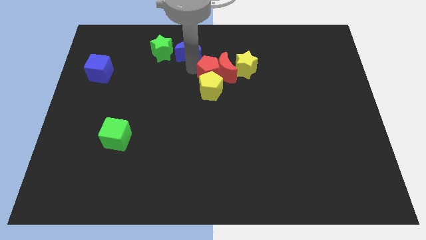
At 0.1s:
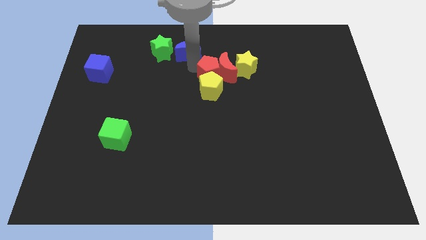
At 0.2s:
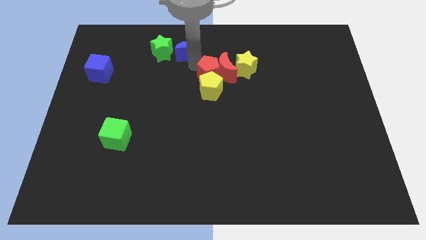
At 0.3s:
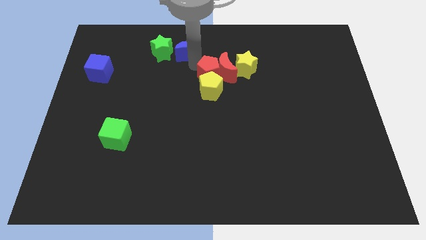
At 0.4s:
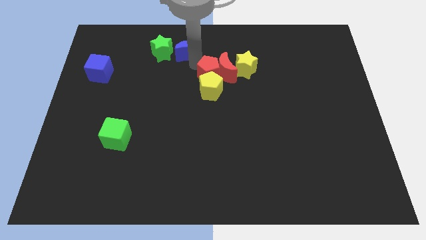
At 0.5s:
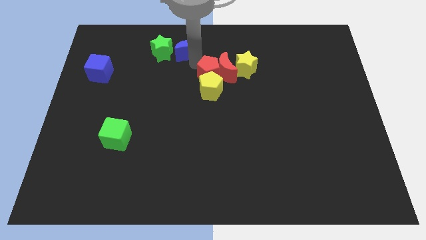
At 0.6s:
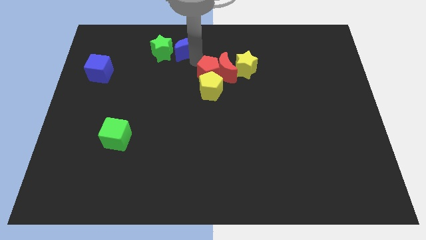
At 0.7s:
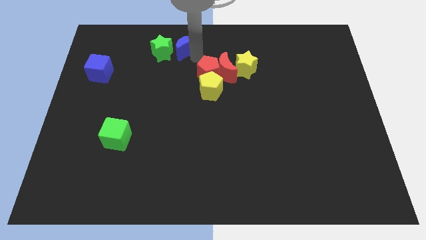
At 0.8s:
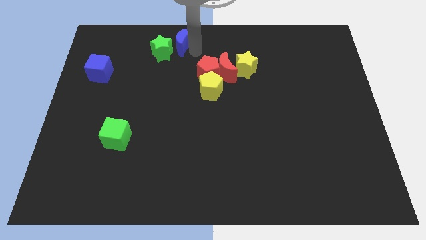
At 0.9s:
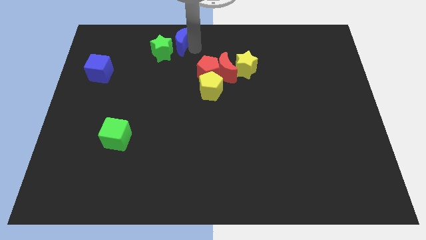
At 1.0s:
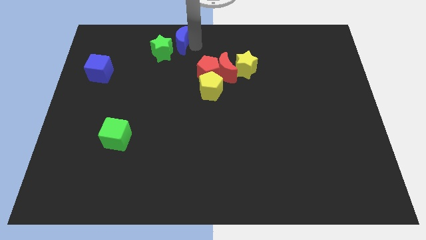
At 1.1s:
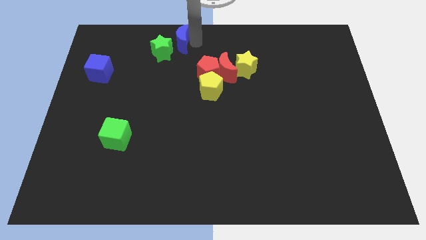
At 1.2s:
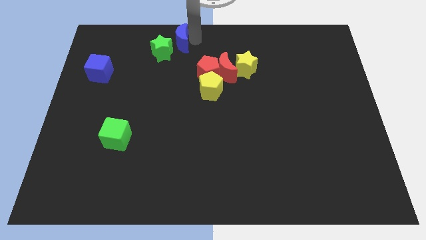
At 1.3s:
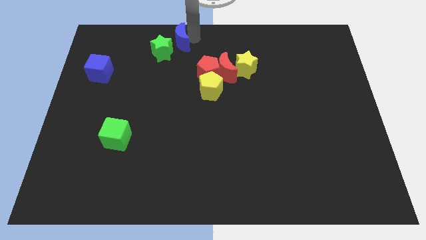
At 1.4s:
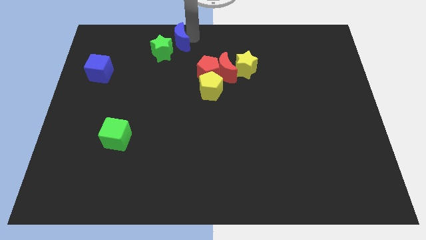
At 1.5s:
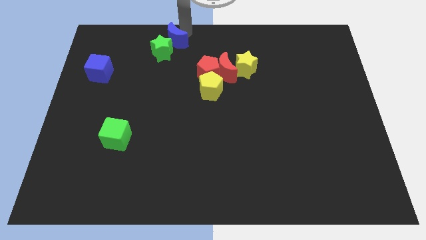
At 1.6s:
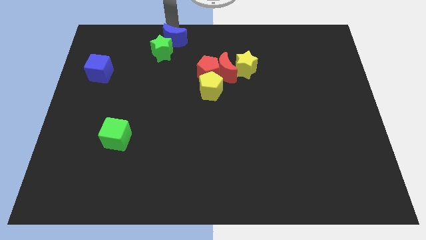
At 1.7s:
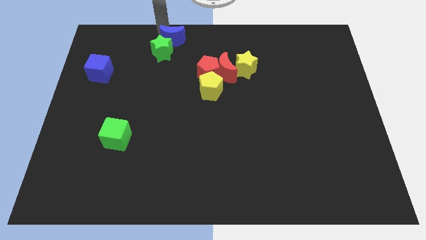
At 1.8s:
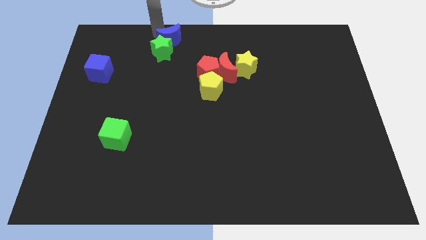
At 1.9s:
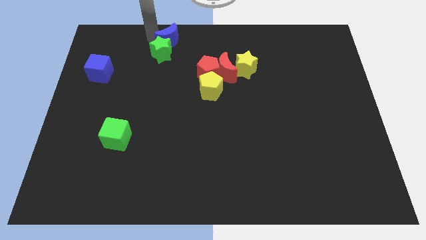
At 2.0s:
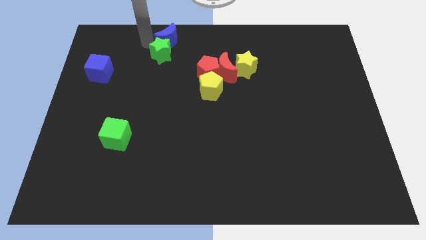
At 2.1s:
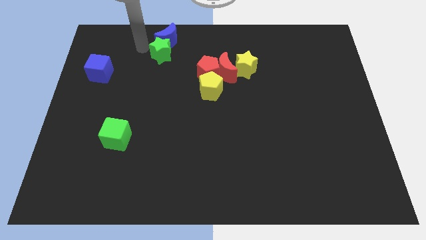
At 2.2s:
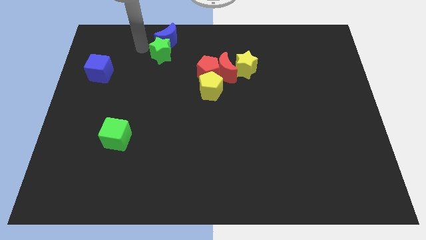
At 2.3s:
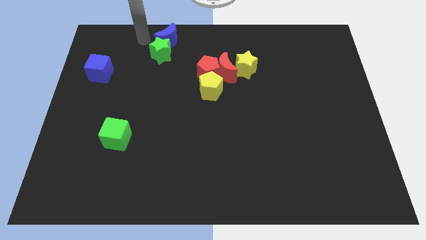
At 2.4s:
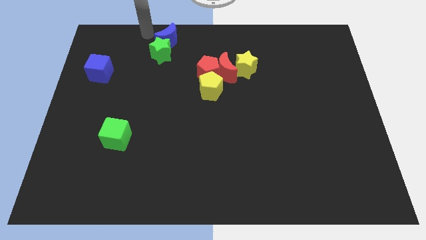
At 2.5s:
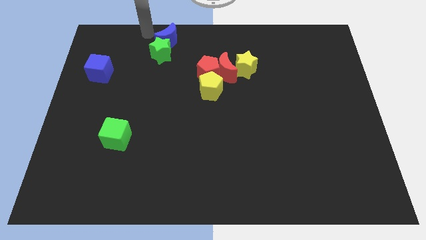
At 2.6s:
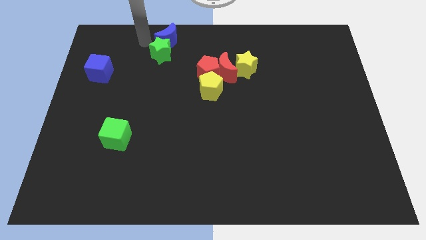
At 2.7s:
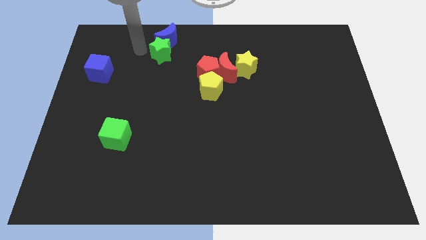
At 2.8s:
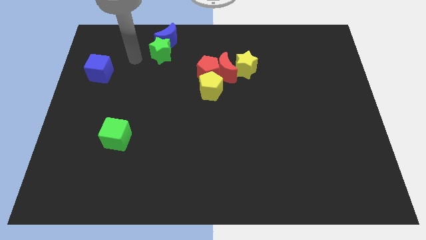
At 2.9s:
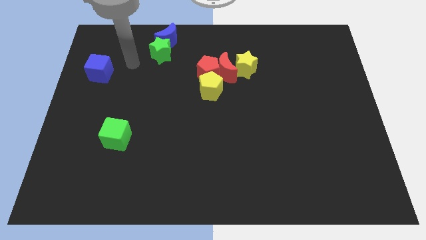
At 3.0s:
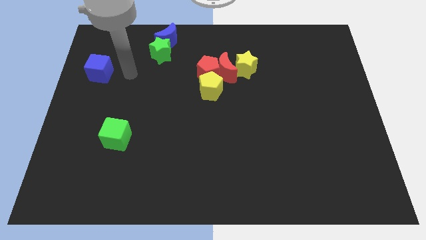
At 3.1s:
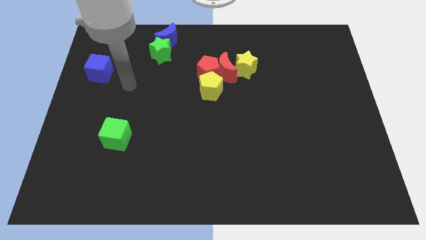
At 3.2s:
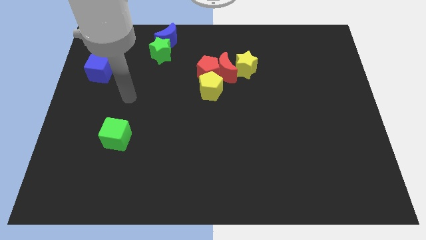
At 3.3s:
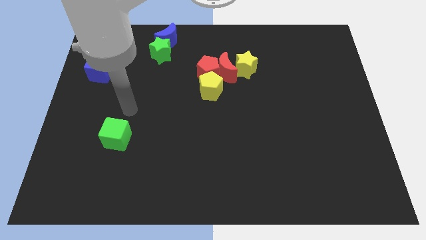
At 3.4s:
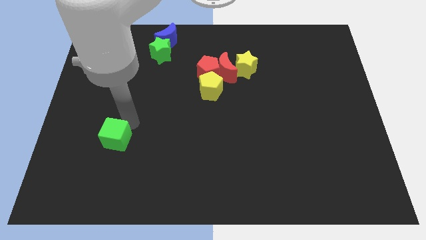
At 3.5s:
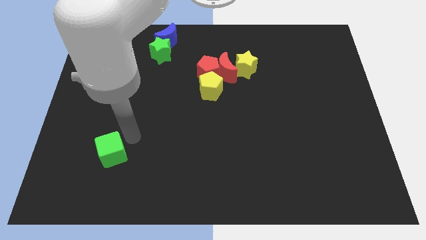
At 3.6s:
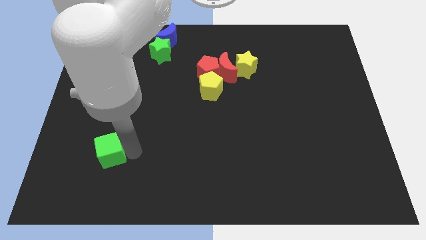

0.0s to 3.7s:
push the blue crescent towards the top right side of the green star

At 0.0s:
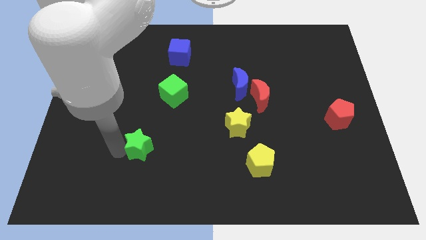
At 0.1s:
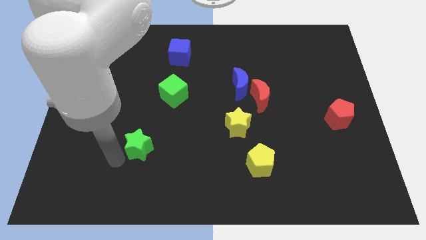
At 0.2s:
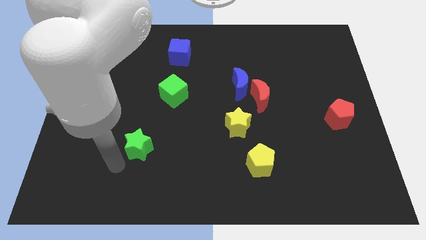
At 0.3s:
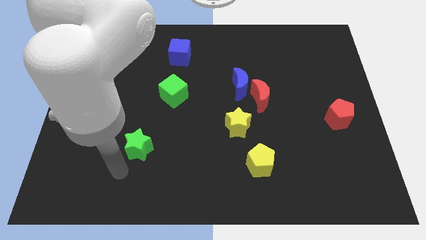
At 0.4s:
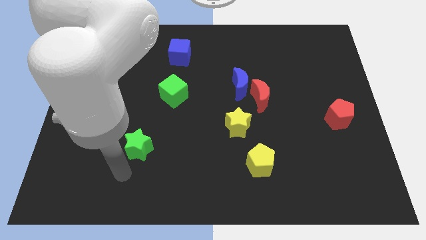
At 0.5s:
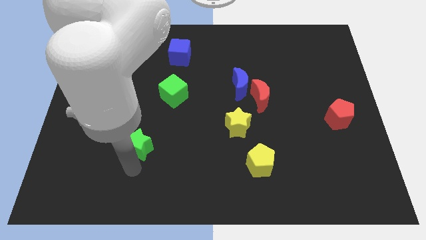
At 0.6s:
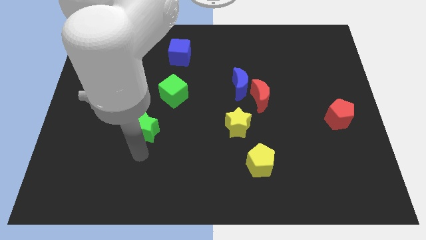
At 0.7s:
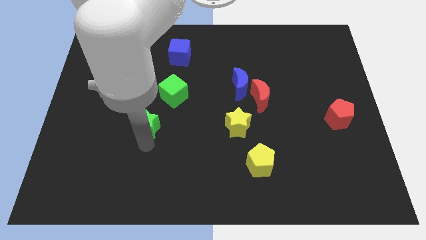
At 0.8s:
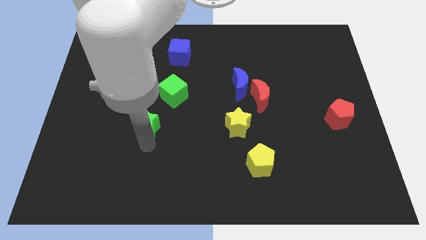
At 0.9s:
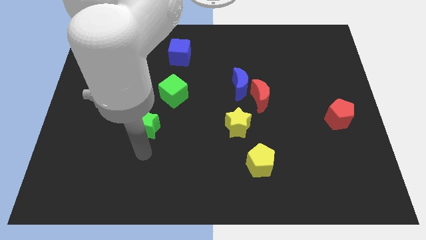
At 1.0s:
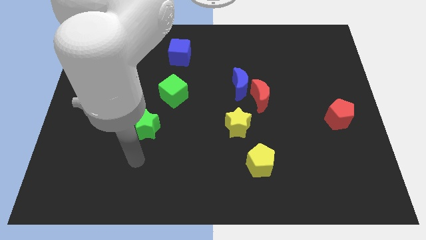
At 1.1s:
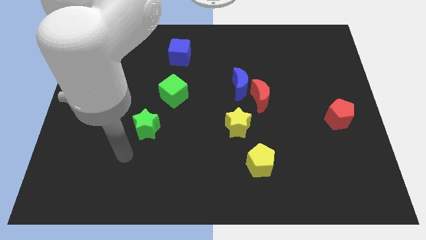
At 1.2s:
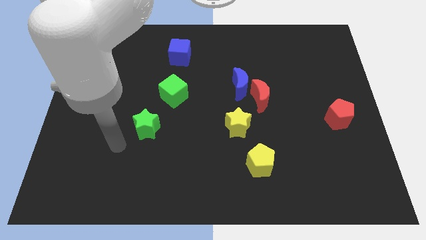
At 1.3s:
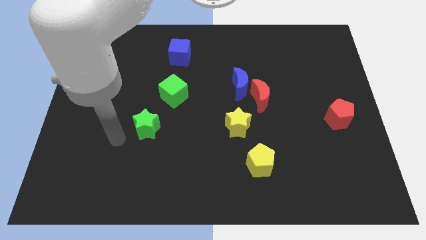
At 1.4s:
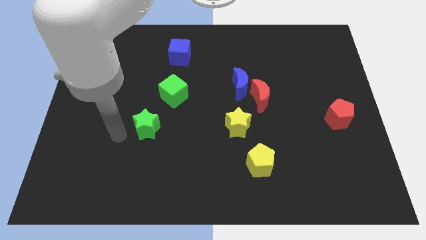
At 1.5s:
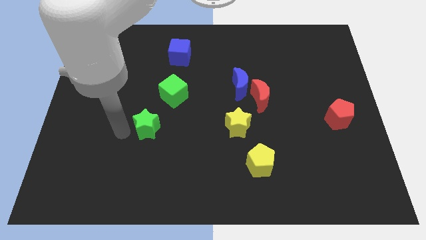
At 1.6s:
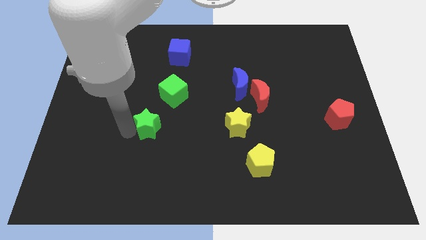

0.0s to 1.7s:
push the green star to the bottom left of the green cube

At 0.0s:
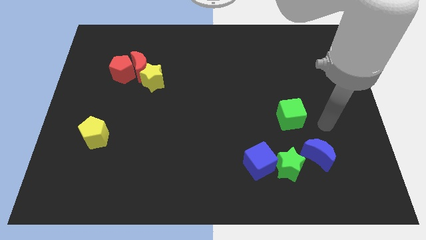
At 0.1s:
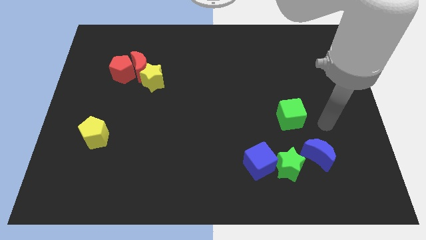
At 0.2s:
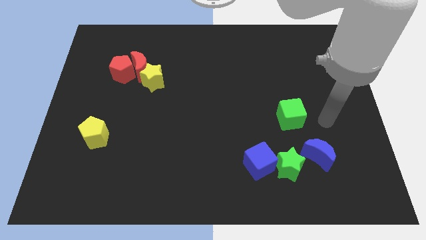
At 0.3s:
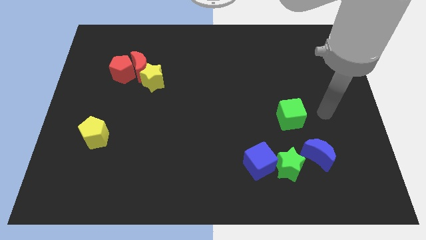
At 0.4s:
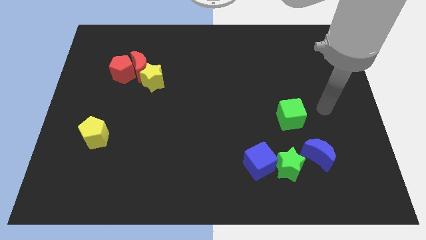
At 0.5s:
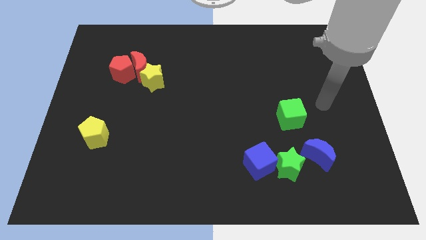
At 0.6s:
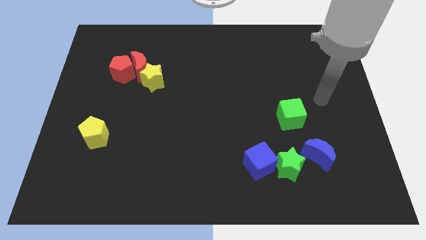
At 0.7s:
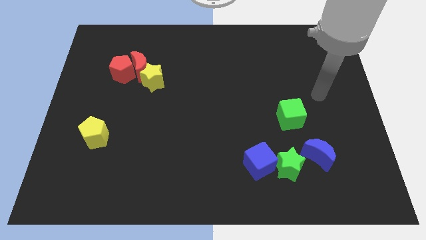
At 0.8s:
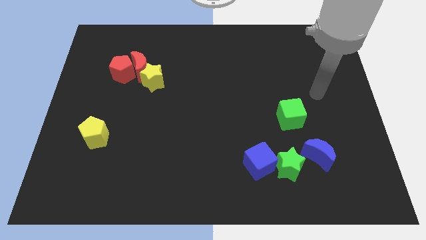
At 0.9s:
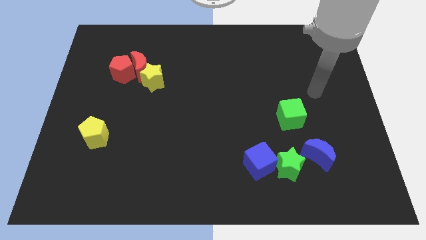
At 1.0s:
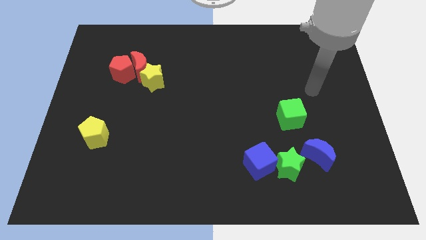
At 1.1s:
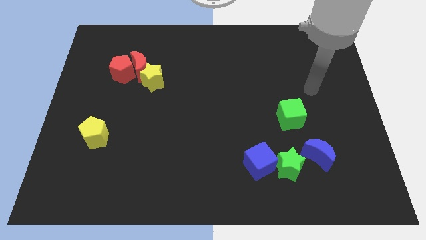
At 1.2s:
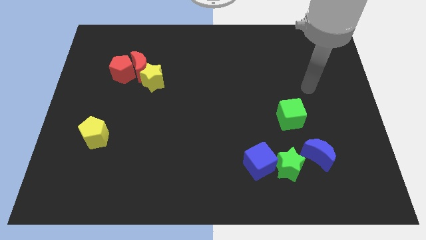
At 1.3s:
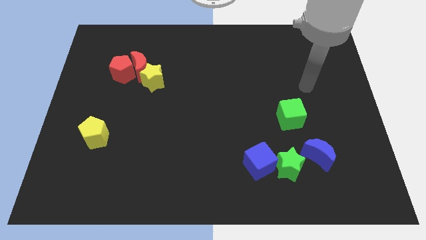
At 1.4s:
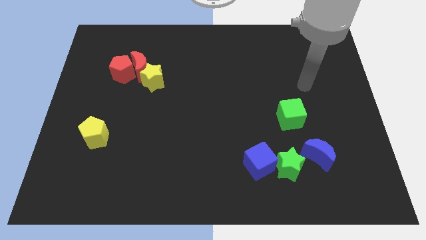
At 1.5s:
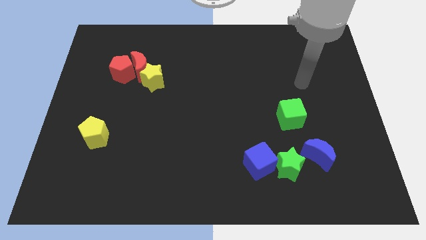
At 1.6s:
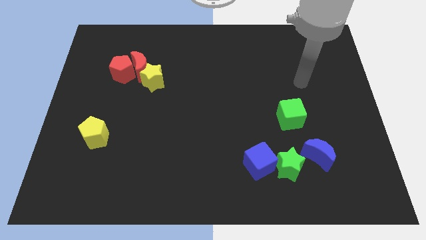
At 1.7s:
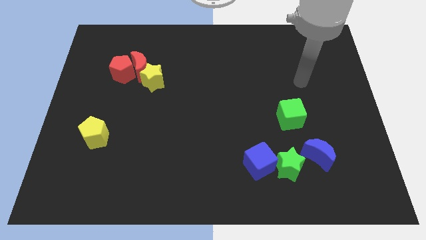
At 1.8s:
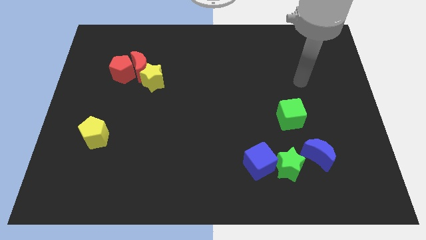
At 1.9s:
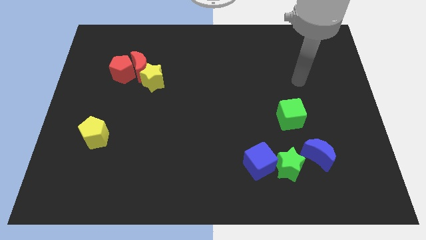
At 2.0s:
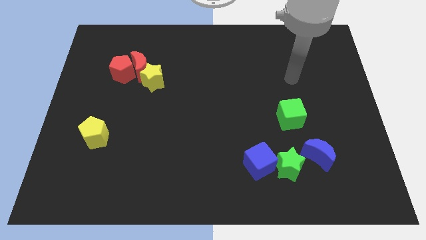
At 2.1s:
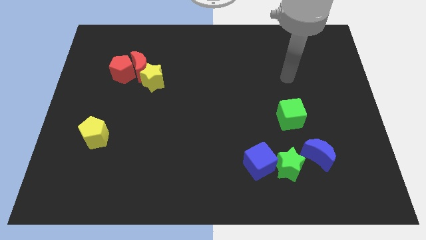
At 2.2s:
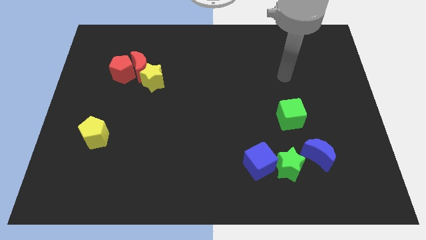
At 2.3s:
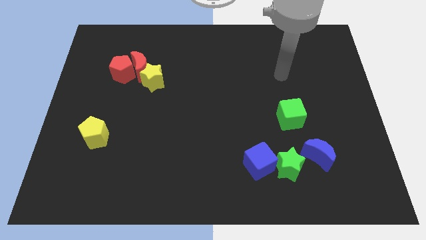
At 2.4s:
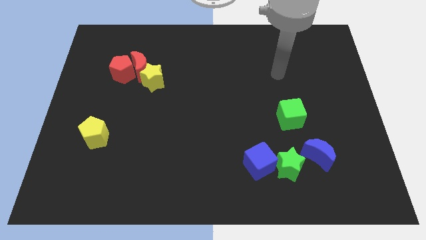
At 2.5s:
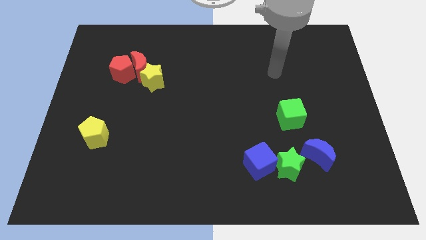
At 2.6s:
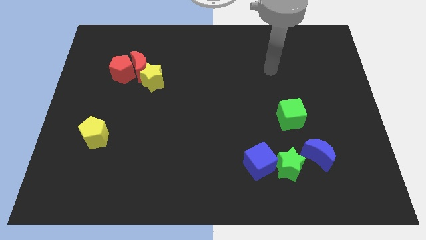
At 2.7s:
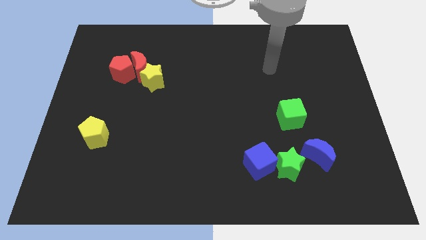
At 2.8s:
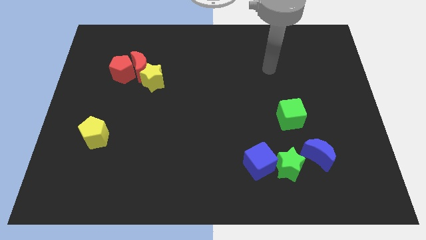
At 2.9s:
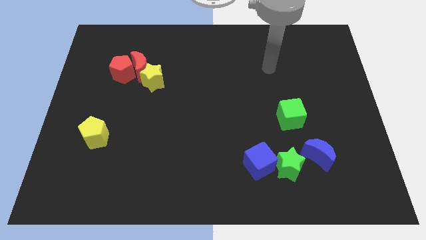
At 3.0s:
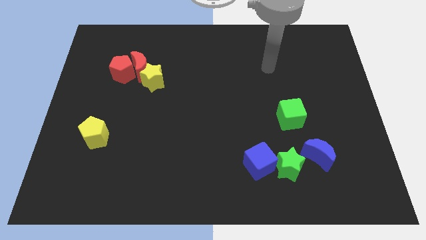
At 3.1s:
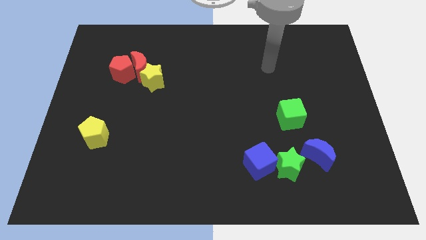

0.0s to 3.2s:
move your hand towards the top side

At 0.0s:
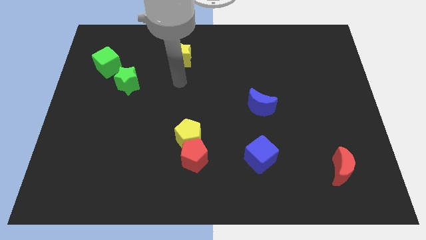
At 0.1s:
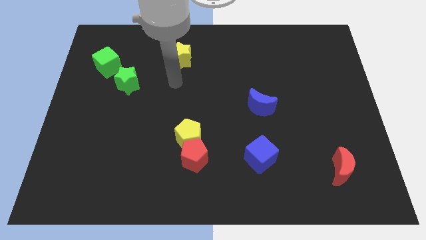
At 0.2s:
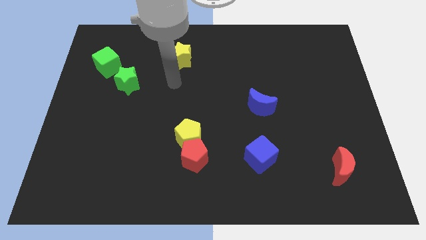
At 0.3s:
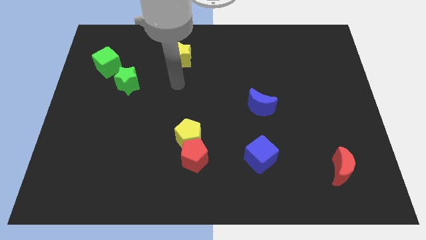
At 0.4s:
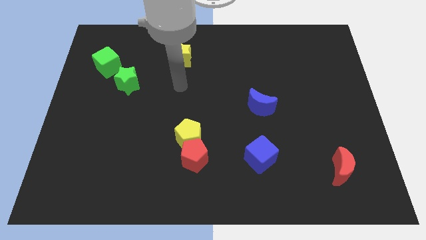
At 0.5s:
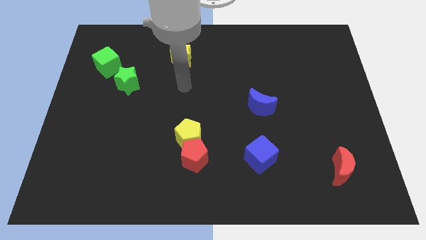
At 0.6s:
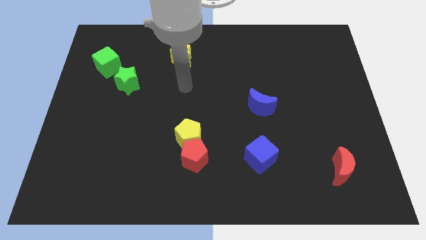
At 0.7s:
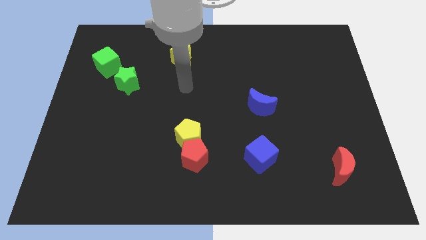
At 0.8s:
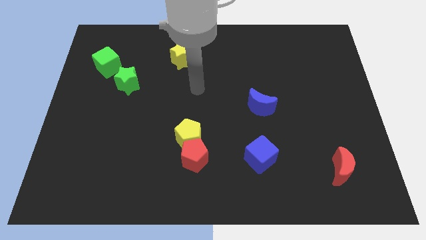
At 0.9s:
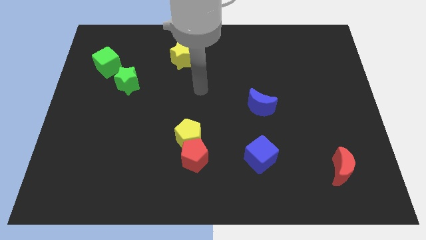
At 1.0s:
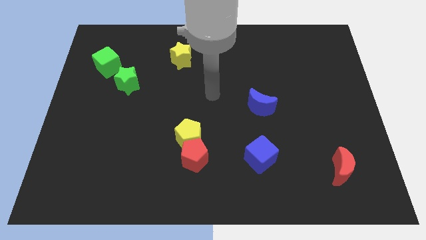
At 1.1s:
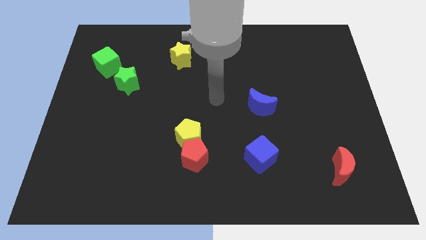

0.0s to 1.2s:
point the arm at the center of the board
